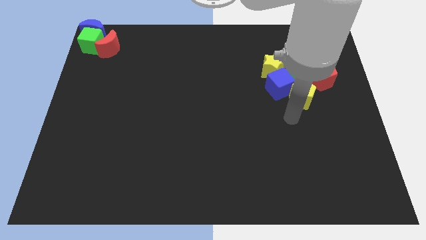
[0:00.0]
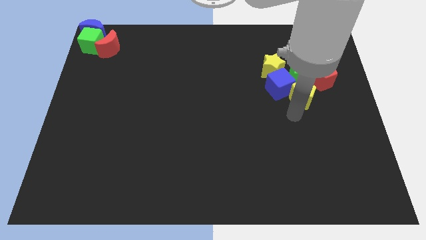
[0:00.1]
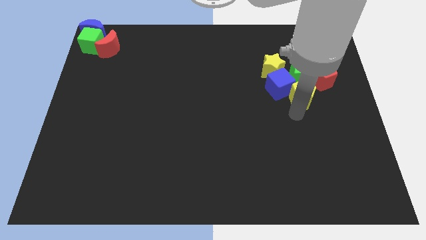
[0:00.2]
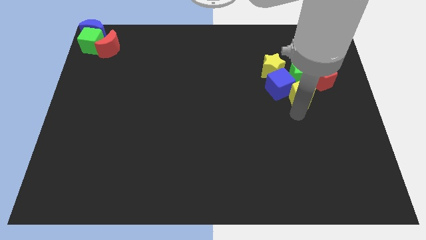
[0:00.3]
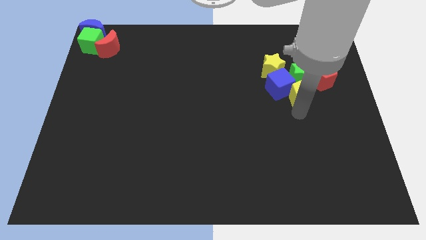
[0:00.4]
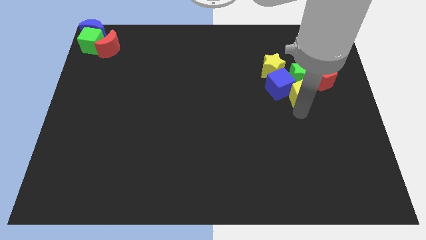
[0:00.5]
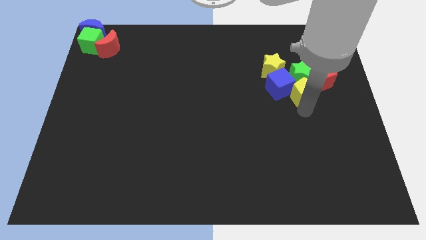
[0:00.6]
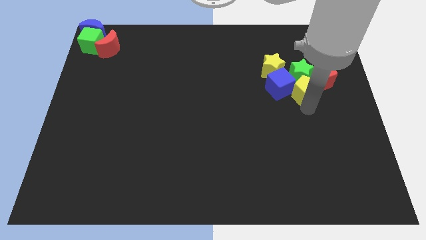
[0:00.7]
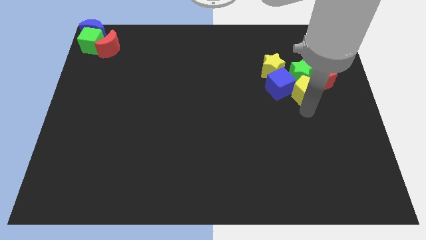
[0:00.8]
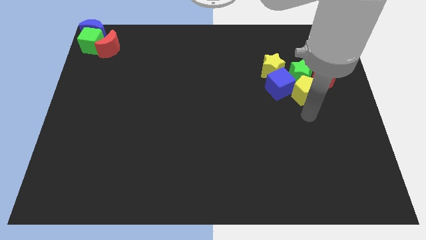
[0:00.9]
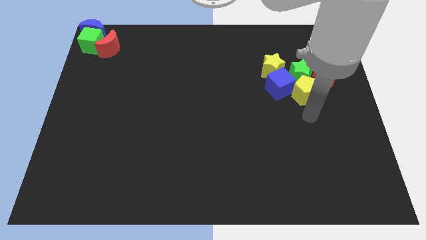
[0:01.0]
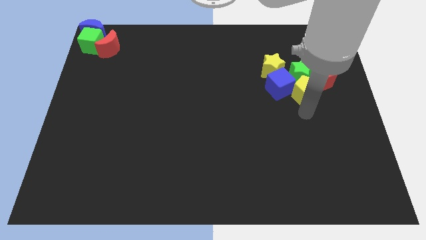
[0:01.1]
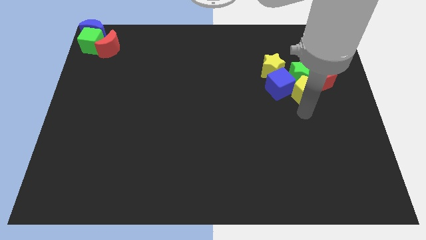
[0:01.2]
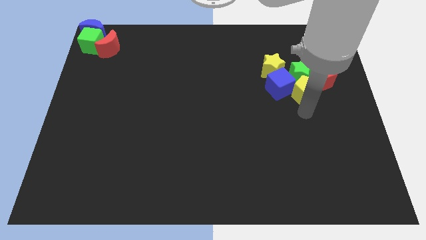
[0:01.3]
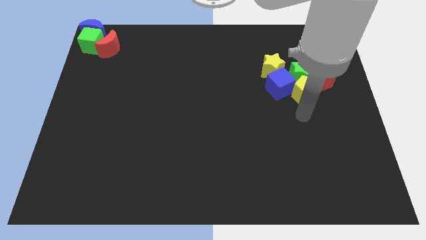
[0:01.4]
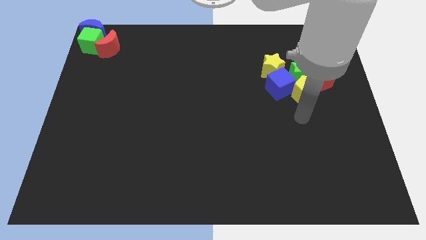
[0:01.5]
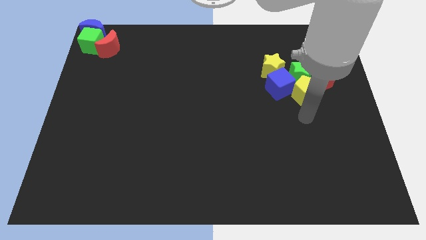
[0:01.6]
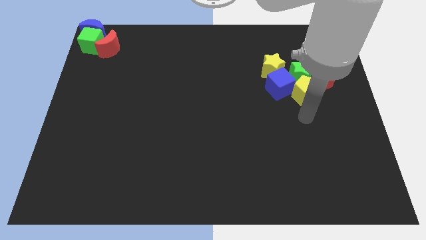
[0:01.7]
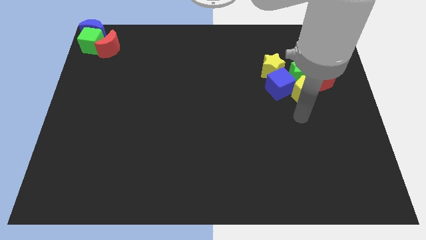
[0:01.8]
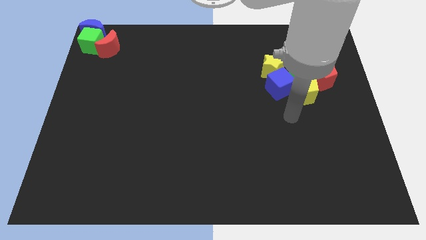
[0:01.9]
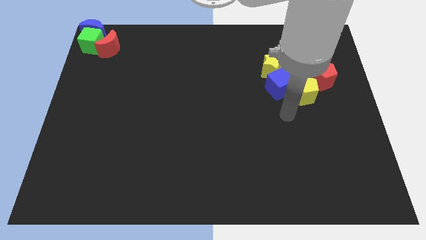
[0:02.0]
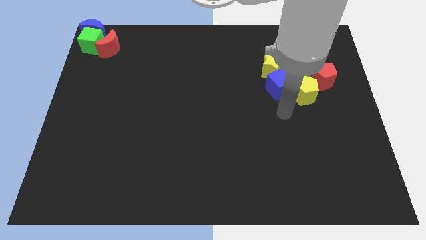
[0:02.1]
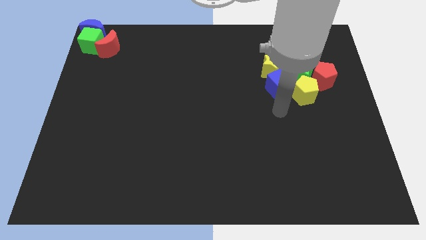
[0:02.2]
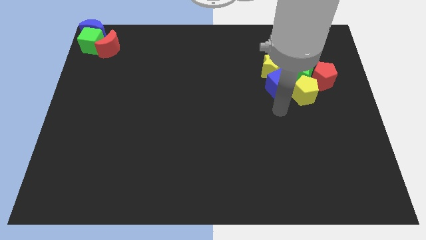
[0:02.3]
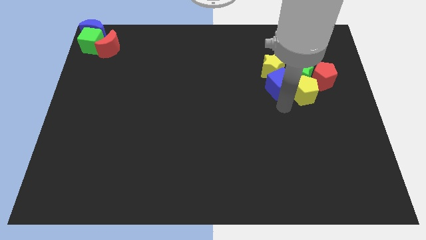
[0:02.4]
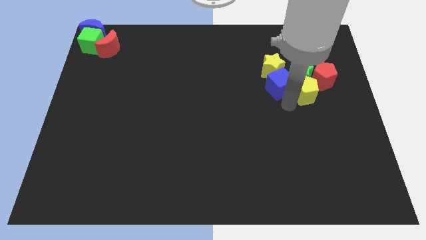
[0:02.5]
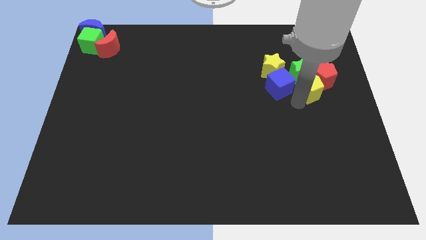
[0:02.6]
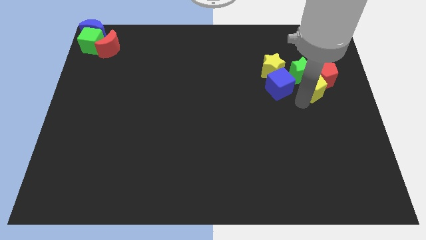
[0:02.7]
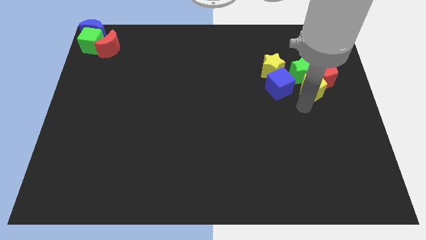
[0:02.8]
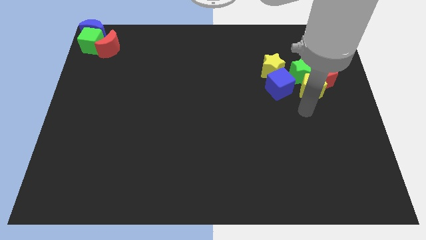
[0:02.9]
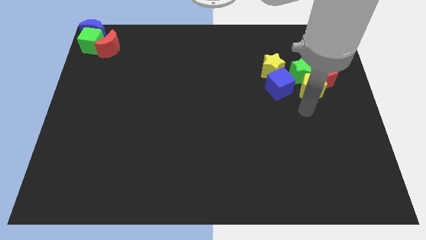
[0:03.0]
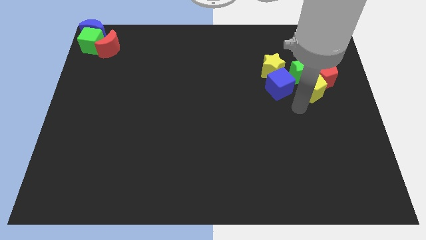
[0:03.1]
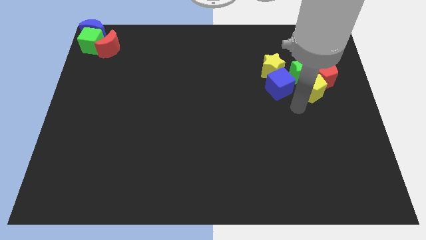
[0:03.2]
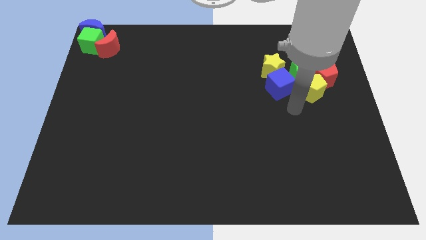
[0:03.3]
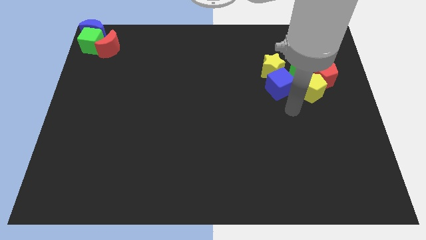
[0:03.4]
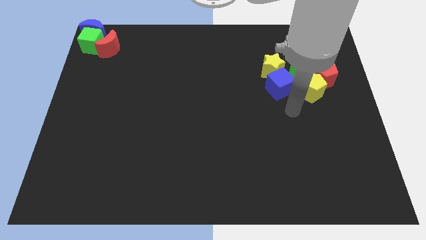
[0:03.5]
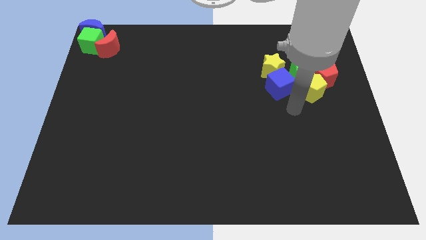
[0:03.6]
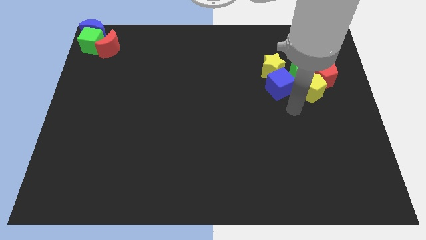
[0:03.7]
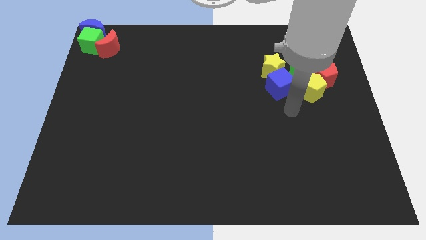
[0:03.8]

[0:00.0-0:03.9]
push the yellow pentagon to the bottom left side of the red pentagon

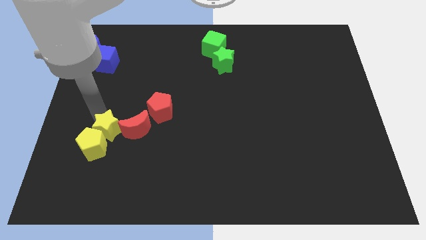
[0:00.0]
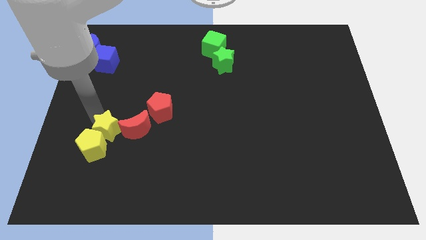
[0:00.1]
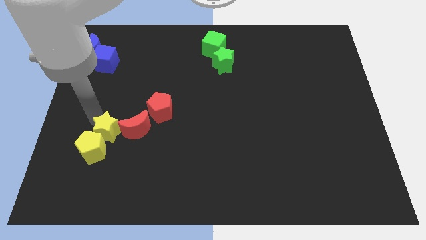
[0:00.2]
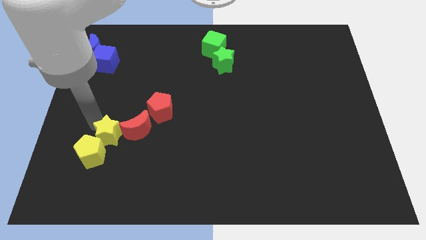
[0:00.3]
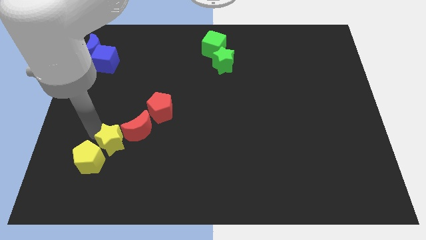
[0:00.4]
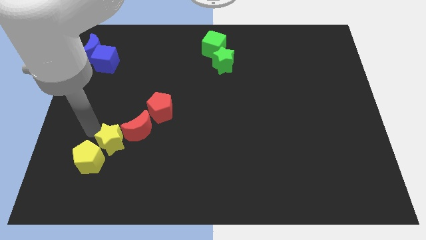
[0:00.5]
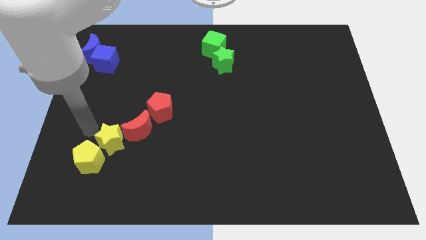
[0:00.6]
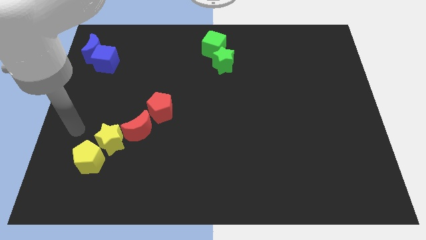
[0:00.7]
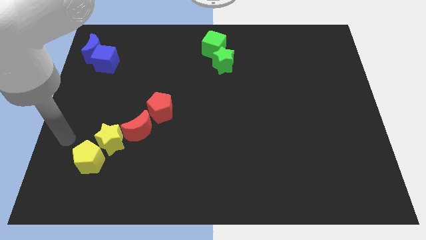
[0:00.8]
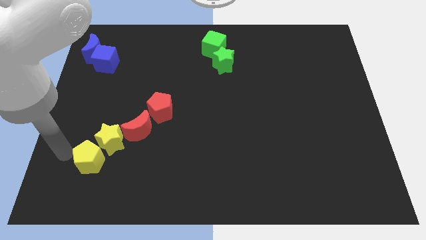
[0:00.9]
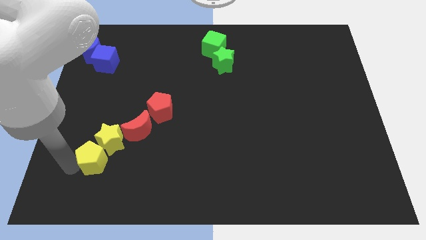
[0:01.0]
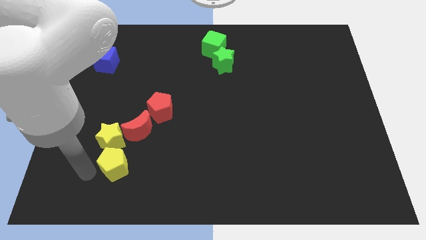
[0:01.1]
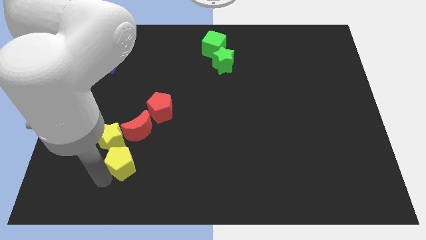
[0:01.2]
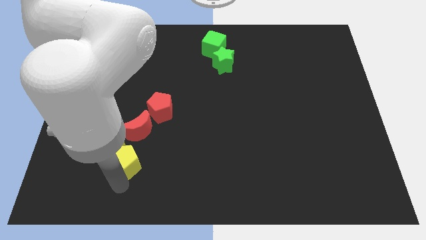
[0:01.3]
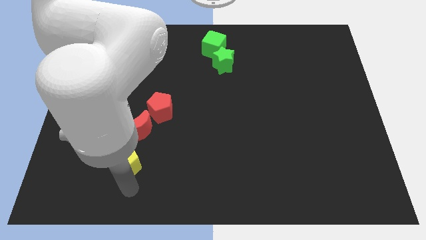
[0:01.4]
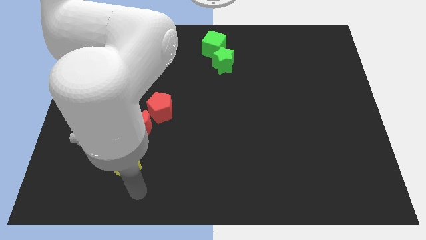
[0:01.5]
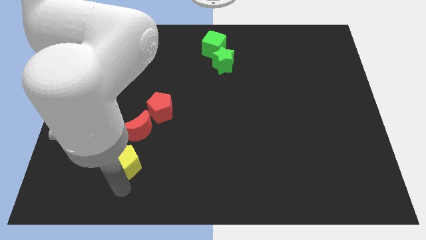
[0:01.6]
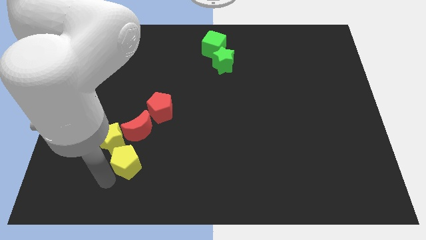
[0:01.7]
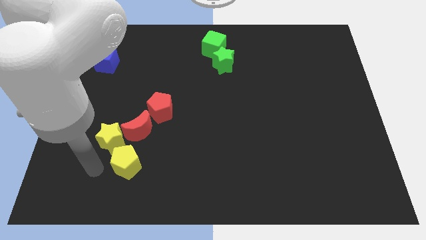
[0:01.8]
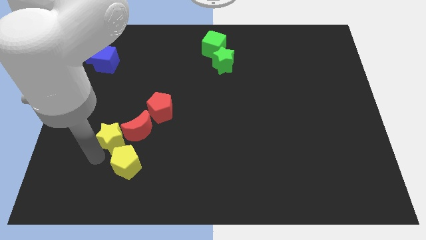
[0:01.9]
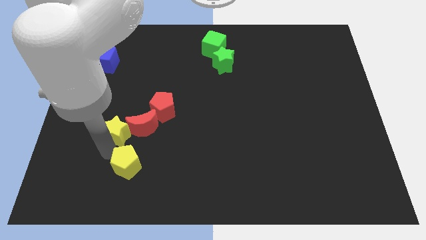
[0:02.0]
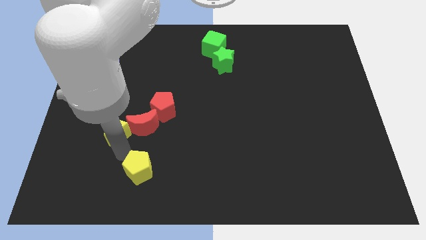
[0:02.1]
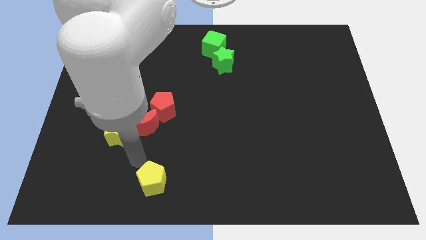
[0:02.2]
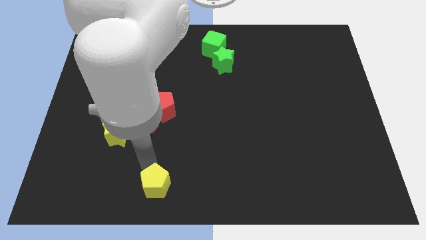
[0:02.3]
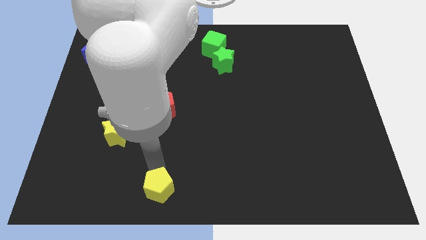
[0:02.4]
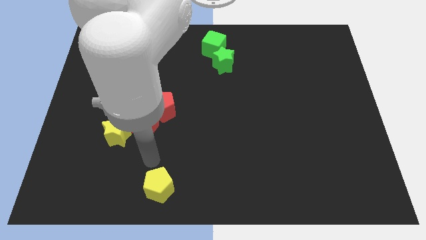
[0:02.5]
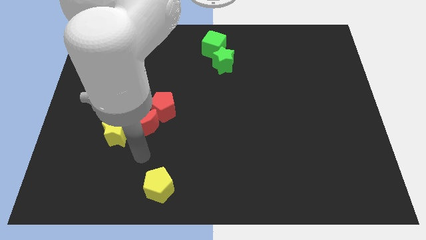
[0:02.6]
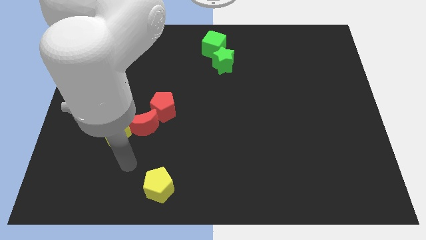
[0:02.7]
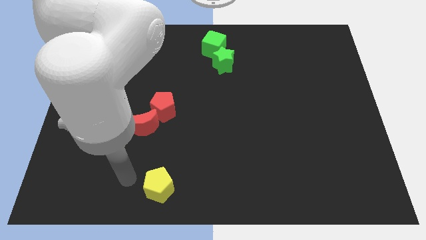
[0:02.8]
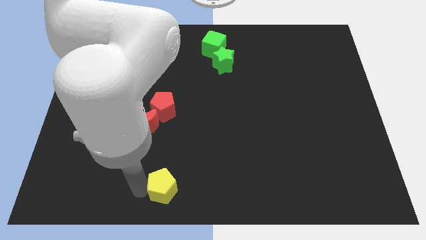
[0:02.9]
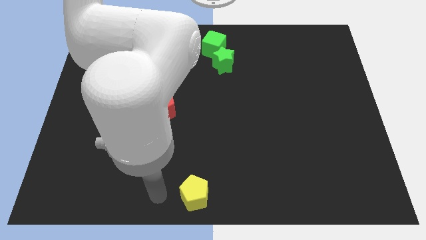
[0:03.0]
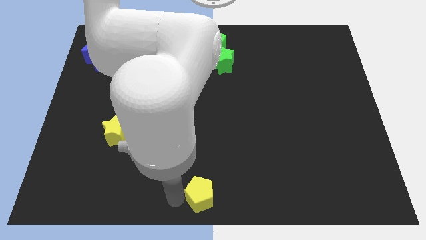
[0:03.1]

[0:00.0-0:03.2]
separate yellow pentagon from yellow star

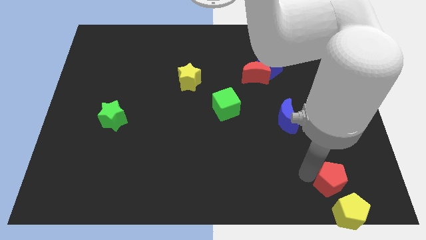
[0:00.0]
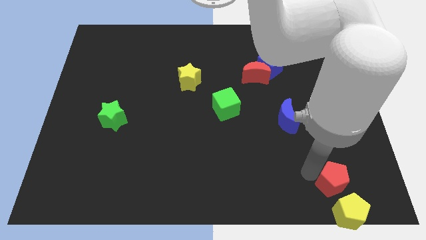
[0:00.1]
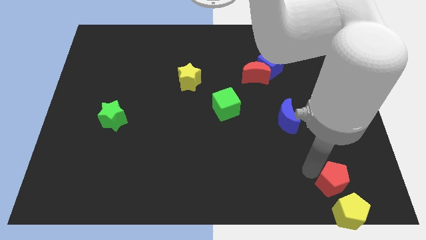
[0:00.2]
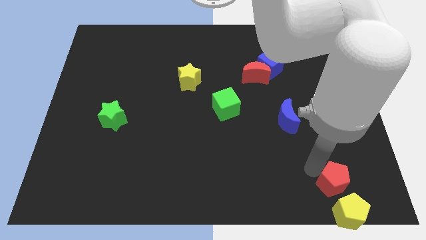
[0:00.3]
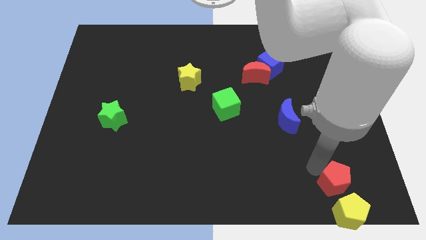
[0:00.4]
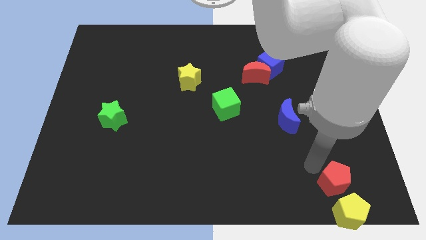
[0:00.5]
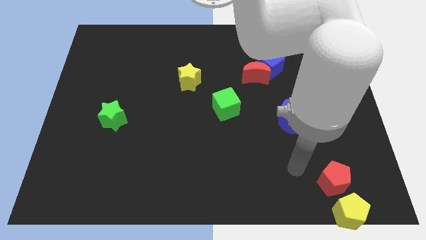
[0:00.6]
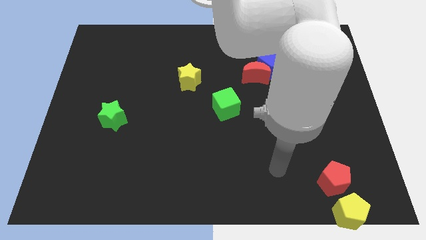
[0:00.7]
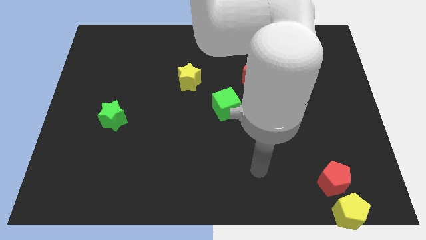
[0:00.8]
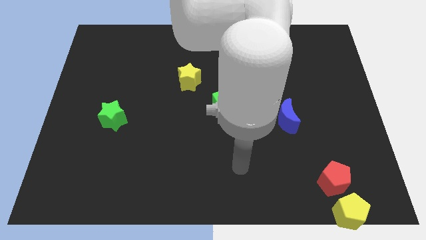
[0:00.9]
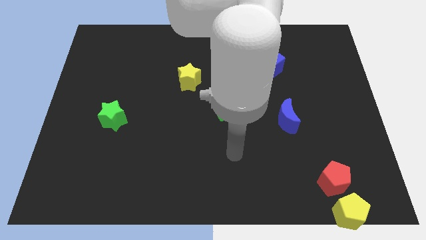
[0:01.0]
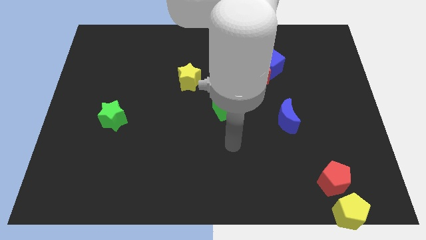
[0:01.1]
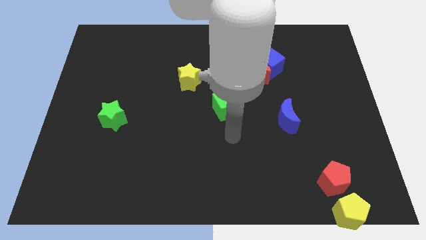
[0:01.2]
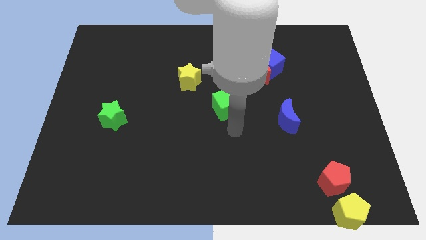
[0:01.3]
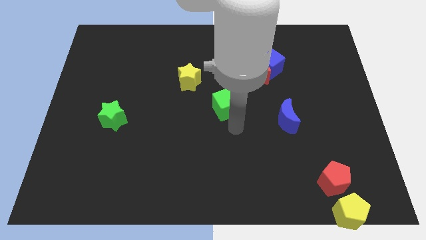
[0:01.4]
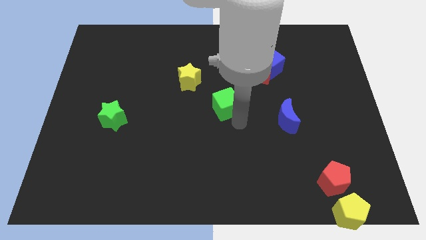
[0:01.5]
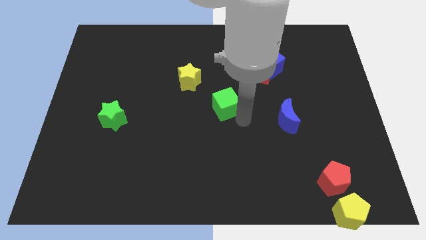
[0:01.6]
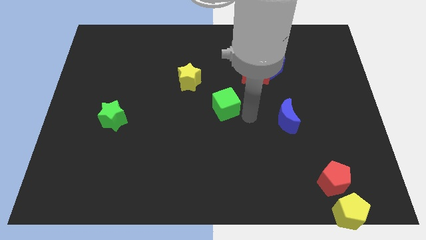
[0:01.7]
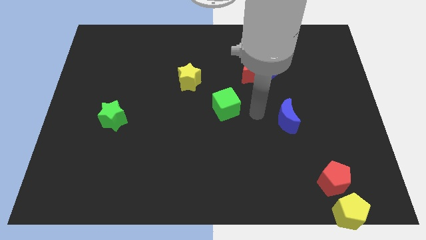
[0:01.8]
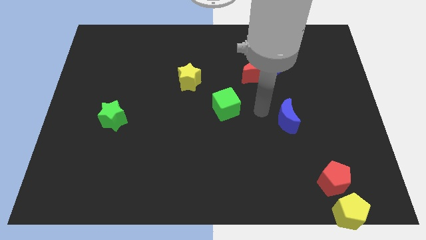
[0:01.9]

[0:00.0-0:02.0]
put your hand between the green cube and blue moon
